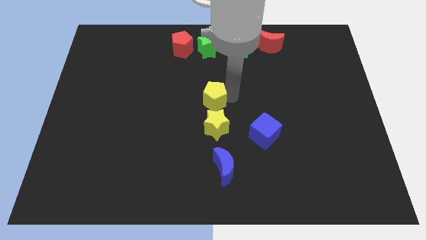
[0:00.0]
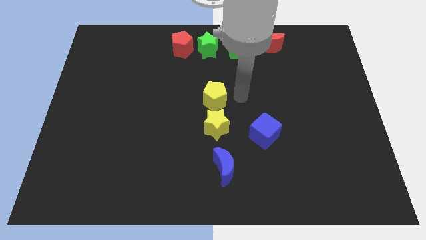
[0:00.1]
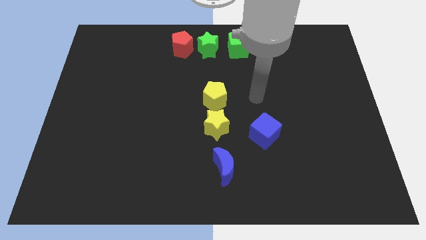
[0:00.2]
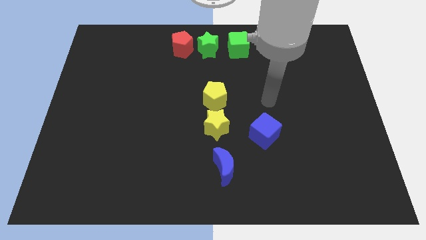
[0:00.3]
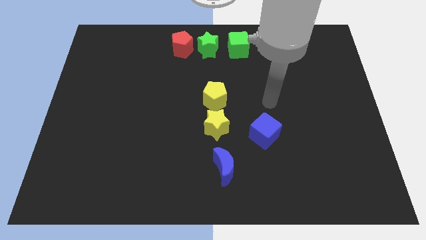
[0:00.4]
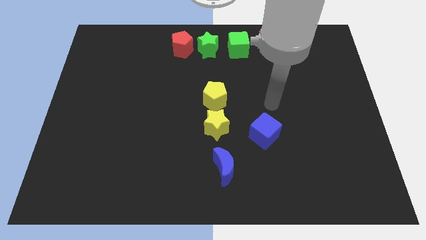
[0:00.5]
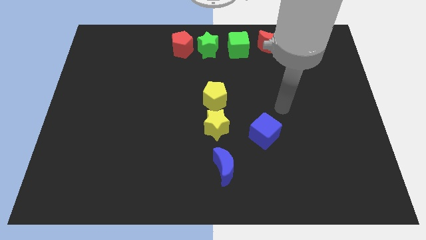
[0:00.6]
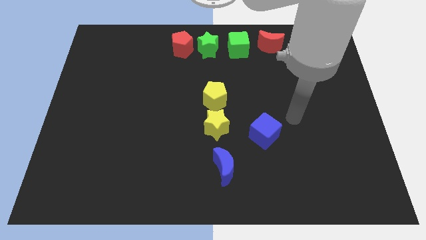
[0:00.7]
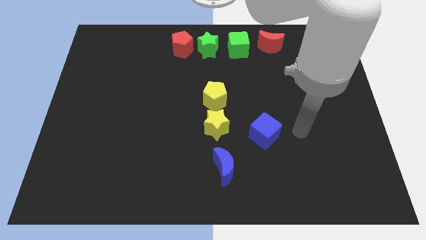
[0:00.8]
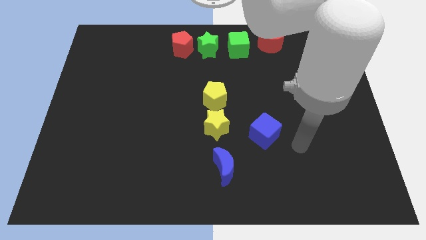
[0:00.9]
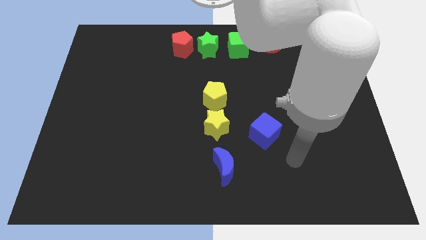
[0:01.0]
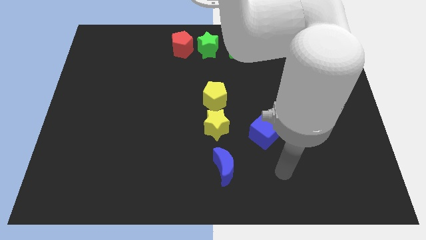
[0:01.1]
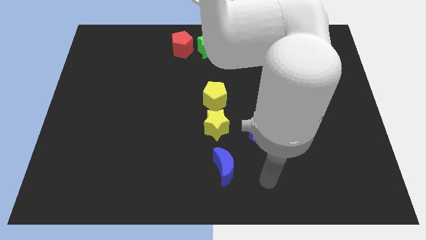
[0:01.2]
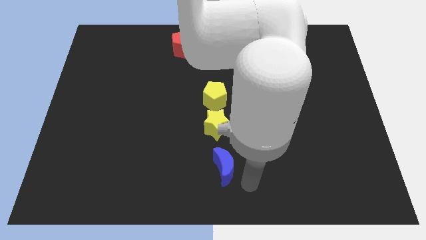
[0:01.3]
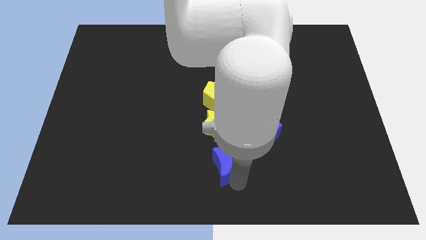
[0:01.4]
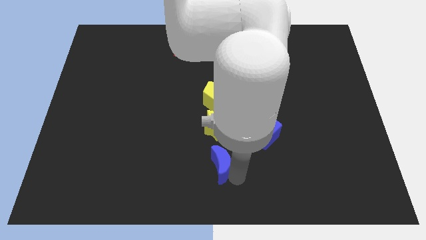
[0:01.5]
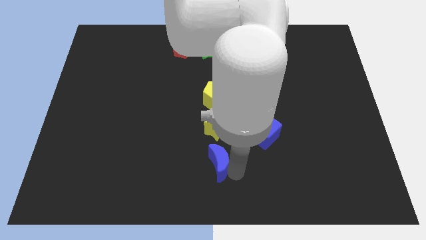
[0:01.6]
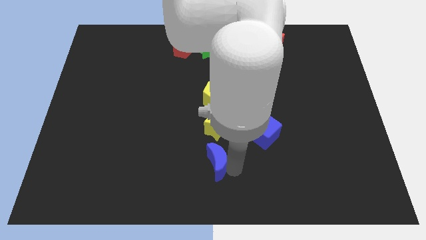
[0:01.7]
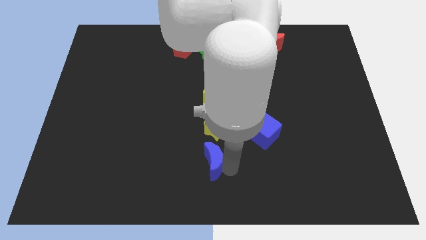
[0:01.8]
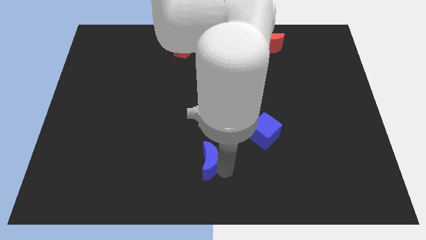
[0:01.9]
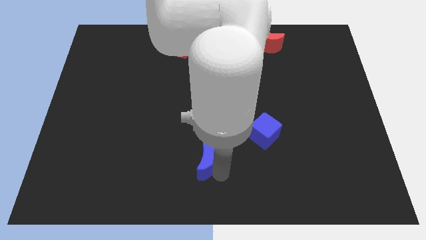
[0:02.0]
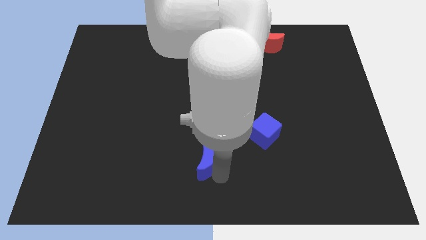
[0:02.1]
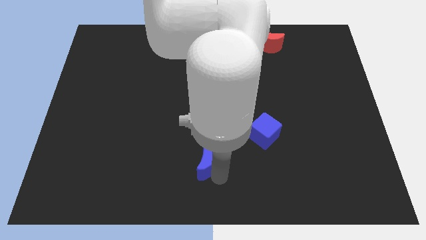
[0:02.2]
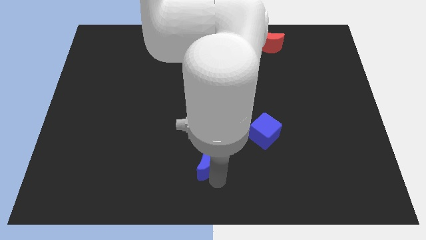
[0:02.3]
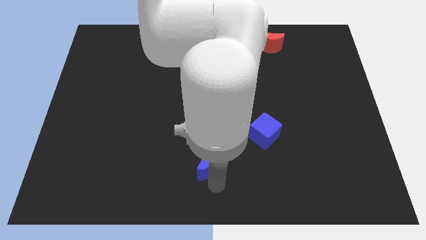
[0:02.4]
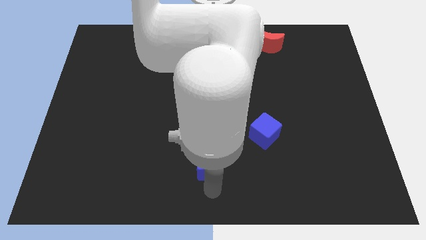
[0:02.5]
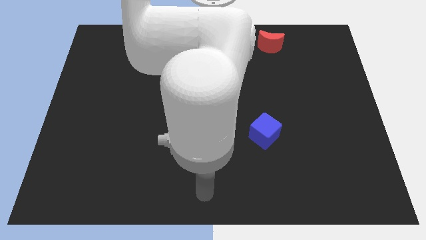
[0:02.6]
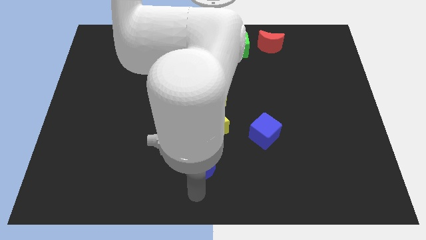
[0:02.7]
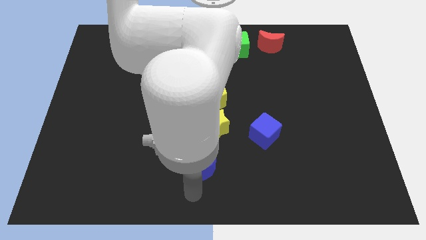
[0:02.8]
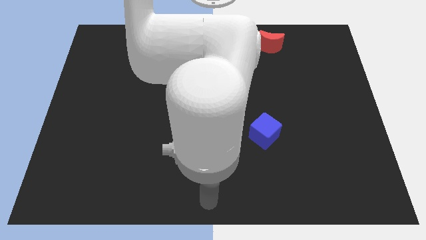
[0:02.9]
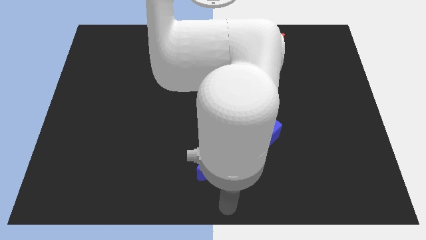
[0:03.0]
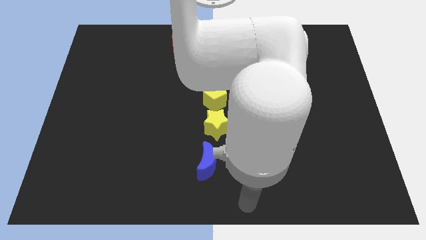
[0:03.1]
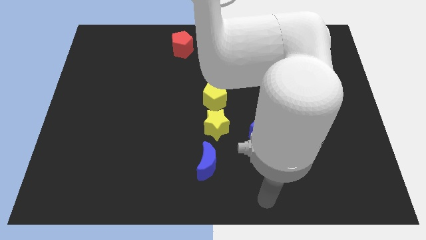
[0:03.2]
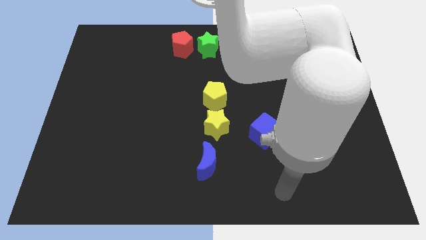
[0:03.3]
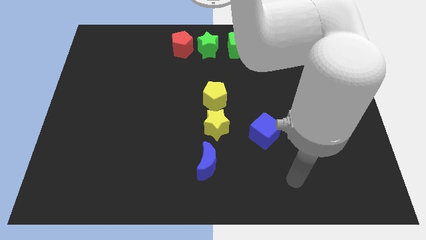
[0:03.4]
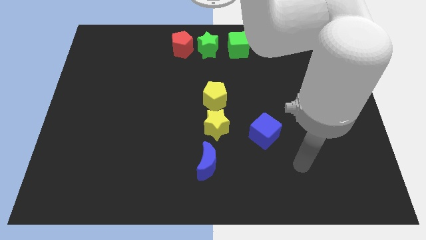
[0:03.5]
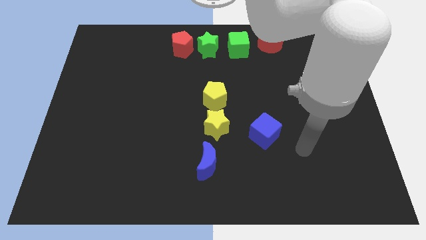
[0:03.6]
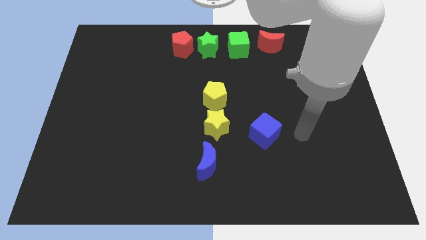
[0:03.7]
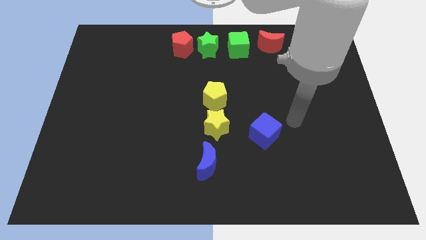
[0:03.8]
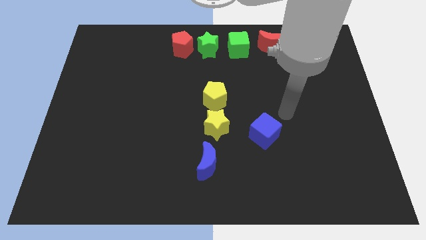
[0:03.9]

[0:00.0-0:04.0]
push the blue moon slightly left

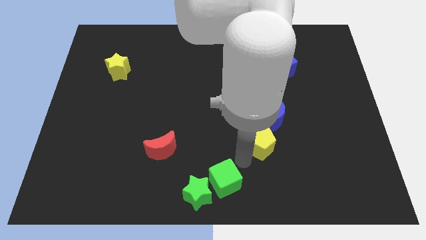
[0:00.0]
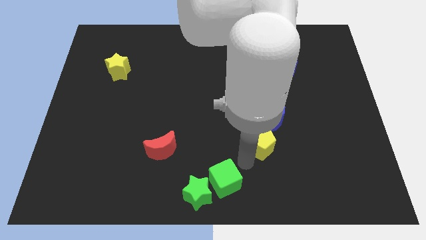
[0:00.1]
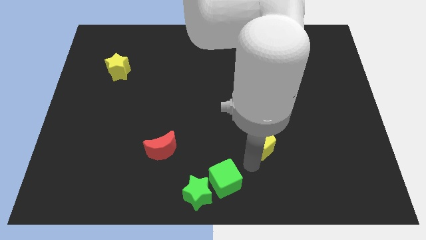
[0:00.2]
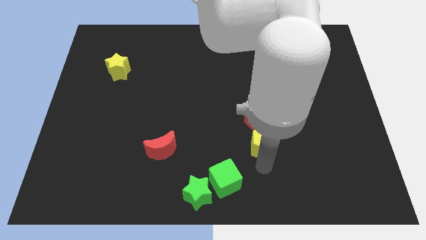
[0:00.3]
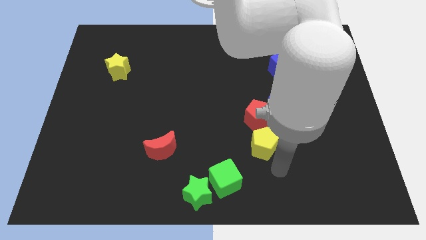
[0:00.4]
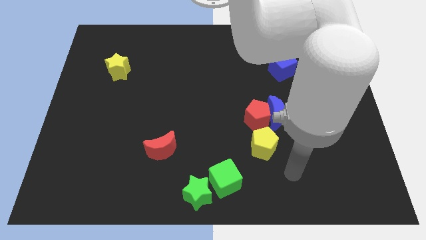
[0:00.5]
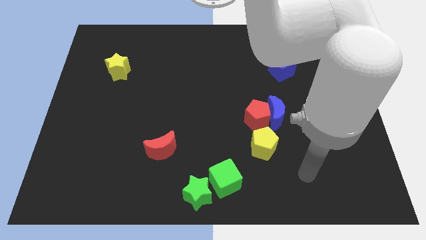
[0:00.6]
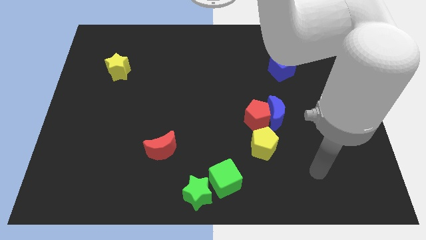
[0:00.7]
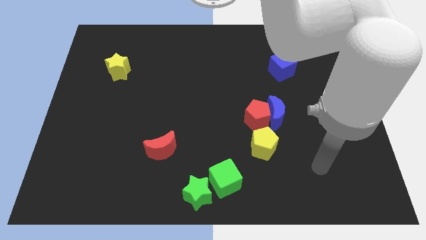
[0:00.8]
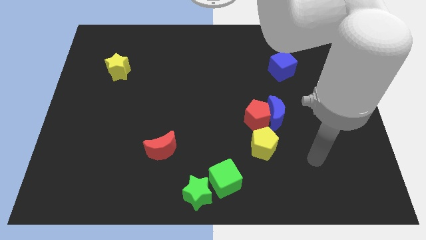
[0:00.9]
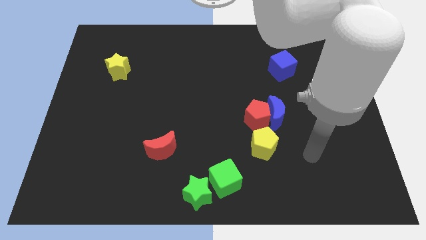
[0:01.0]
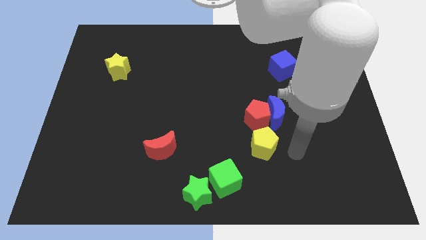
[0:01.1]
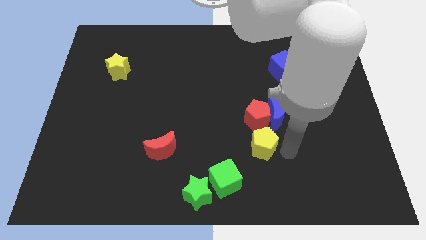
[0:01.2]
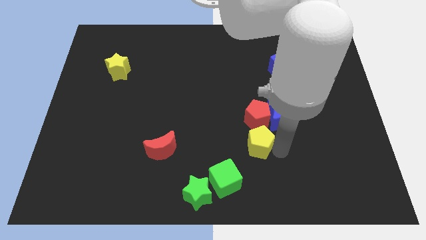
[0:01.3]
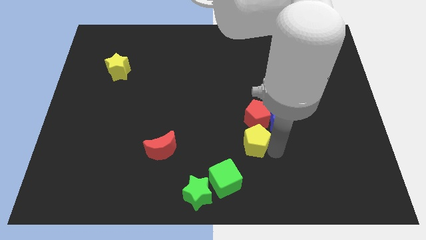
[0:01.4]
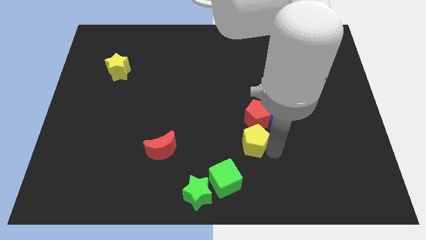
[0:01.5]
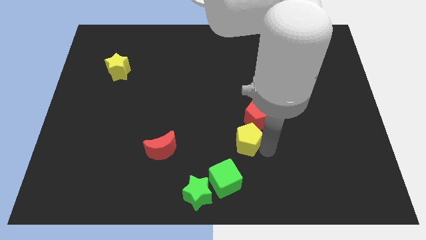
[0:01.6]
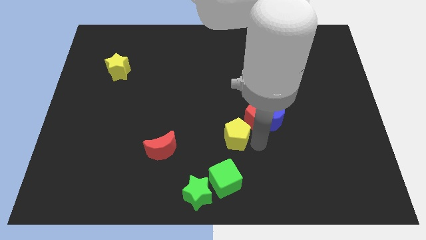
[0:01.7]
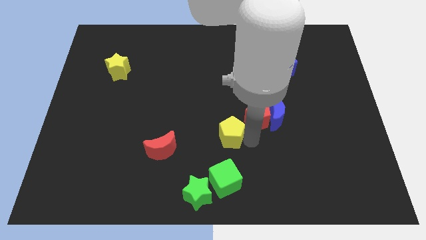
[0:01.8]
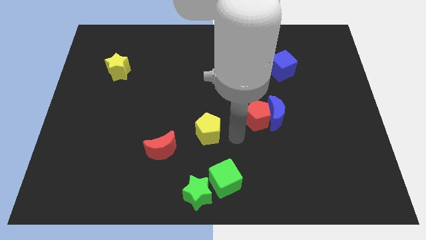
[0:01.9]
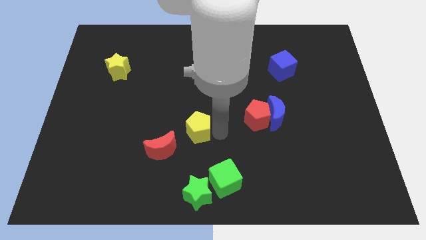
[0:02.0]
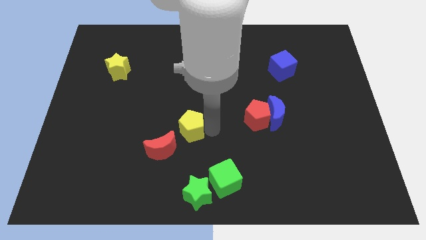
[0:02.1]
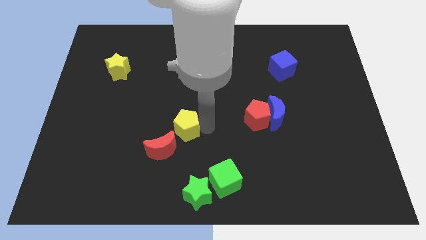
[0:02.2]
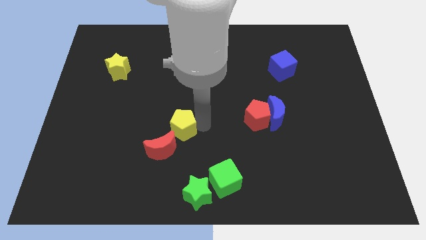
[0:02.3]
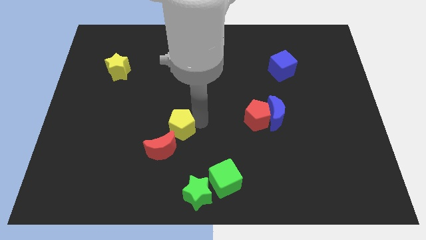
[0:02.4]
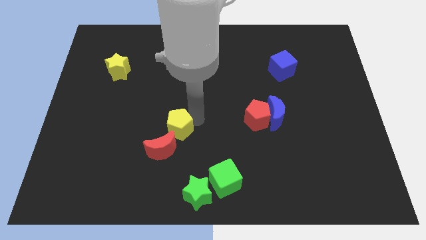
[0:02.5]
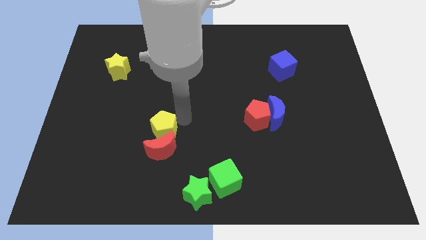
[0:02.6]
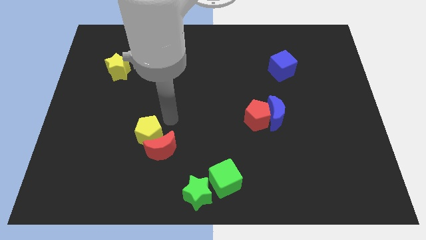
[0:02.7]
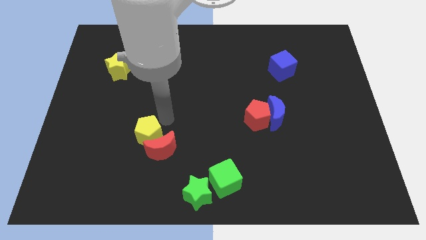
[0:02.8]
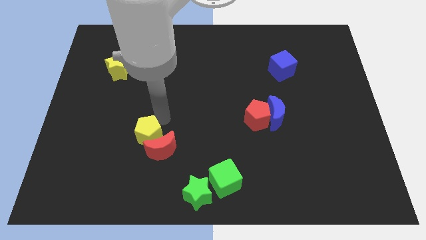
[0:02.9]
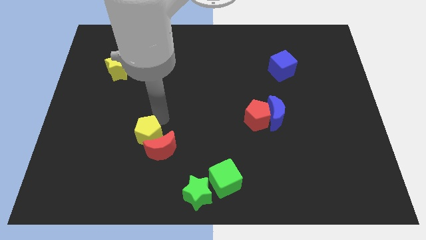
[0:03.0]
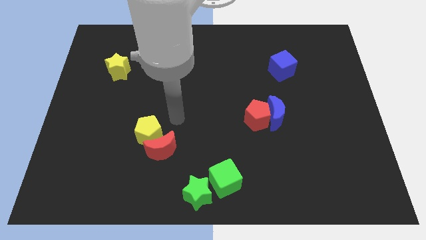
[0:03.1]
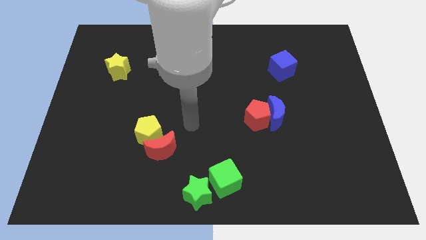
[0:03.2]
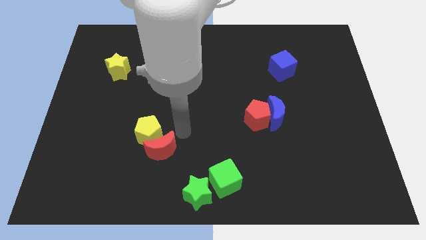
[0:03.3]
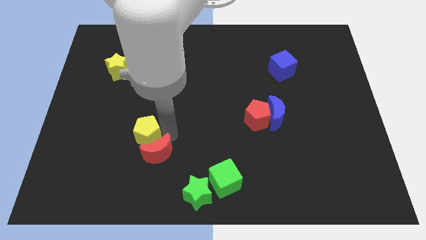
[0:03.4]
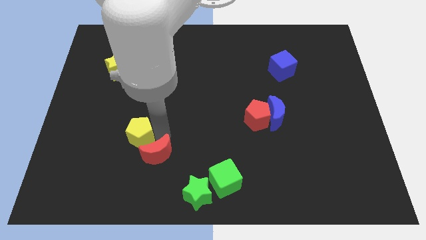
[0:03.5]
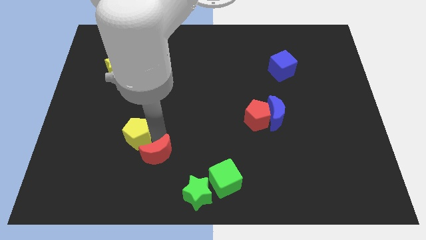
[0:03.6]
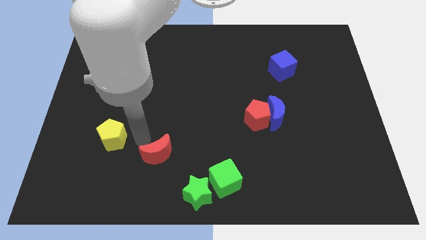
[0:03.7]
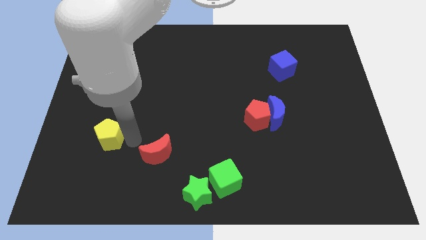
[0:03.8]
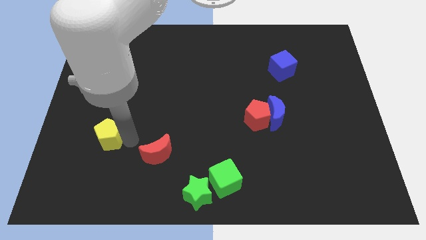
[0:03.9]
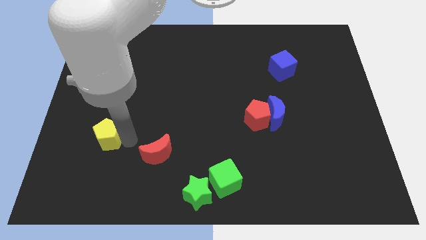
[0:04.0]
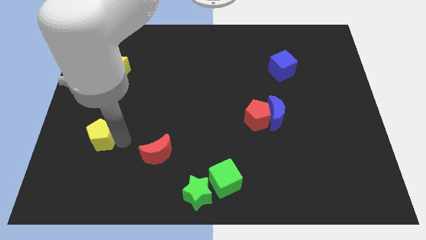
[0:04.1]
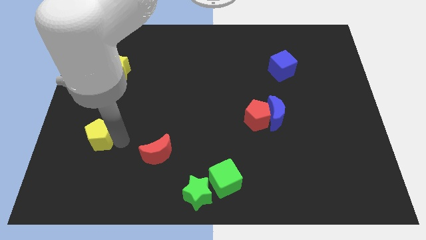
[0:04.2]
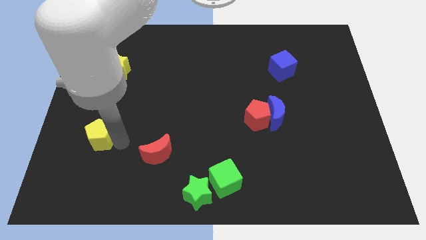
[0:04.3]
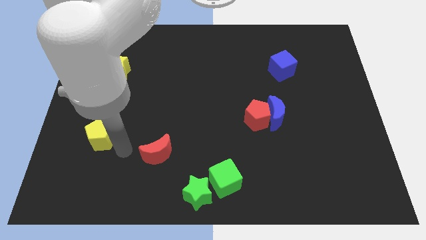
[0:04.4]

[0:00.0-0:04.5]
move the yellow pentagon underneath the yellow star

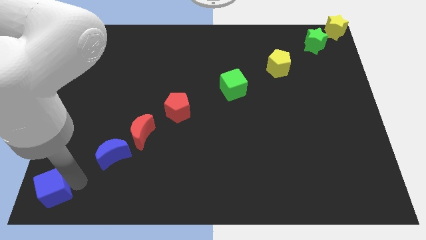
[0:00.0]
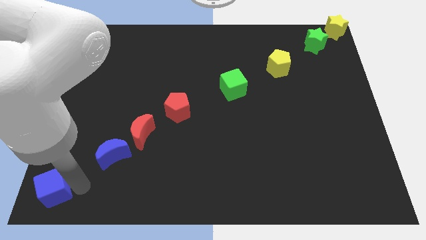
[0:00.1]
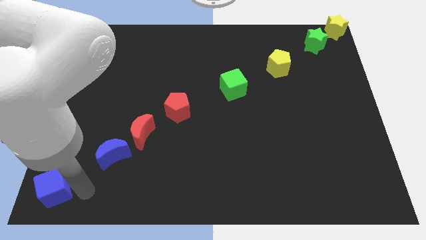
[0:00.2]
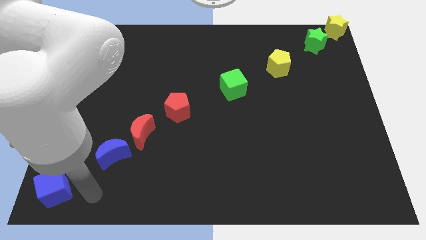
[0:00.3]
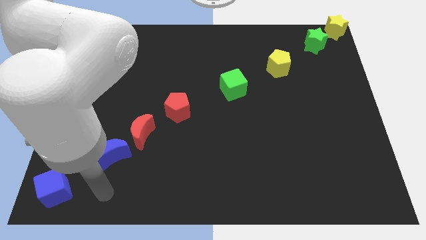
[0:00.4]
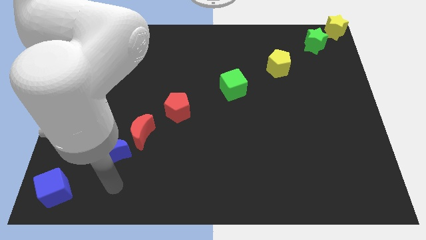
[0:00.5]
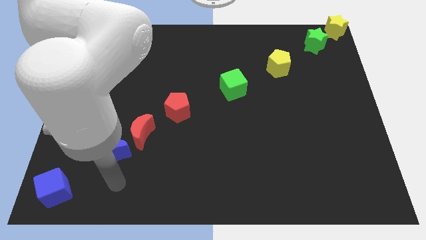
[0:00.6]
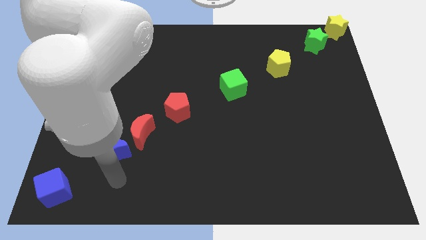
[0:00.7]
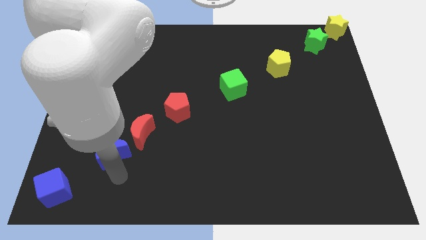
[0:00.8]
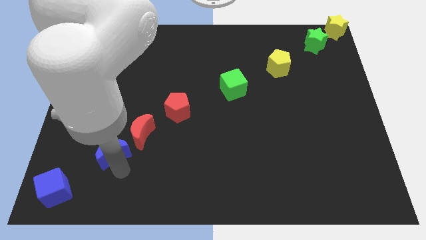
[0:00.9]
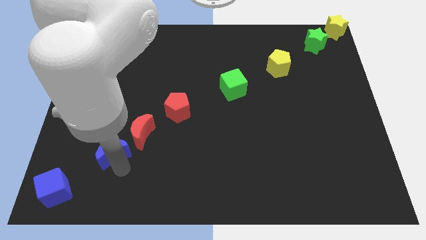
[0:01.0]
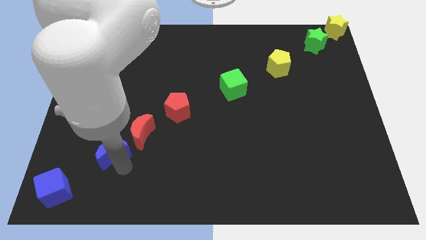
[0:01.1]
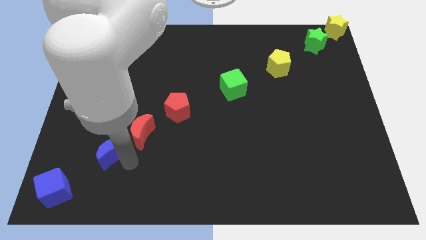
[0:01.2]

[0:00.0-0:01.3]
move your arm to the bottom side of the blue crescent
